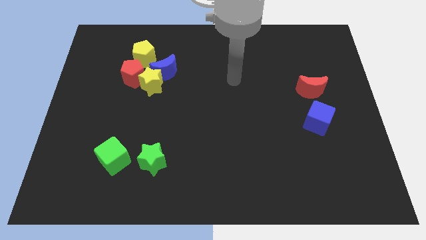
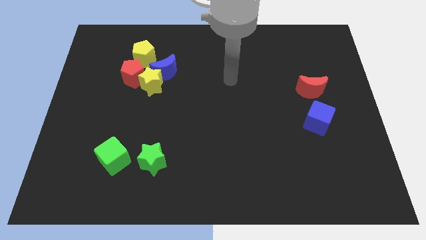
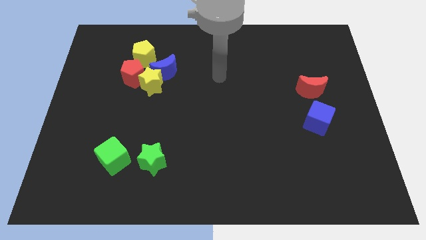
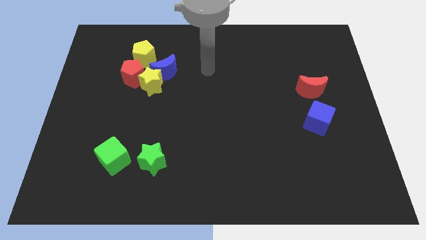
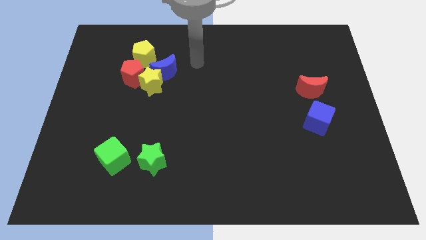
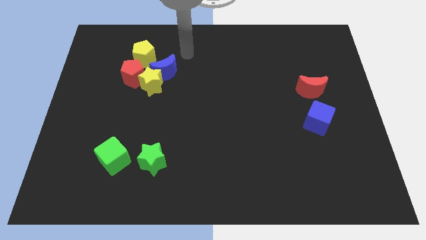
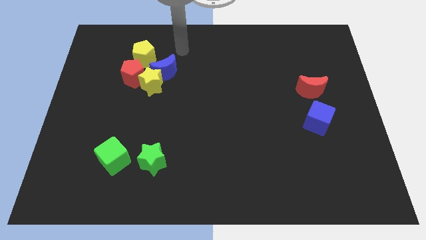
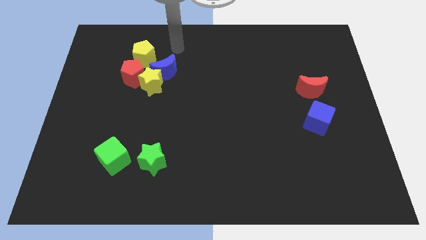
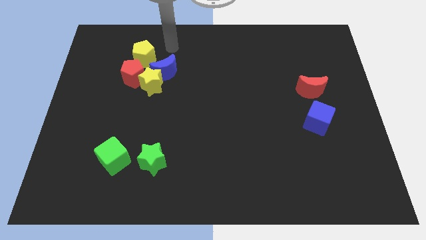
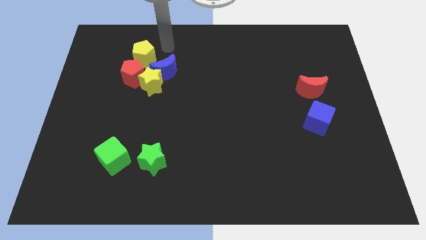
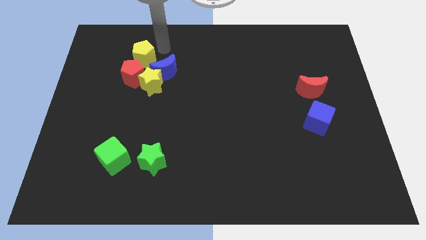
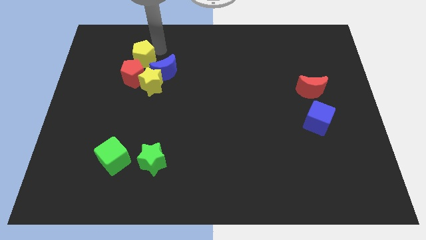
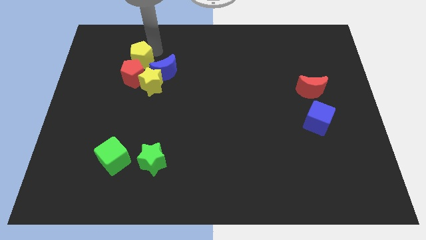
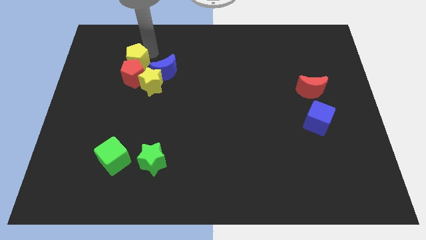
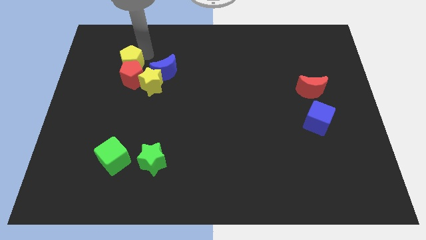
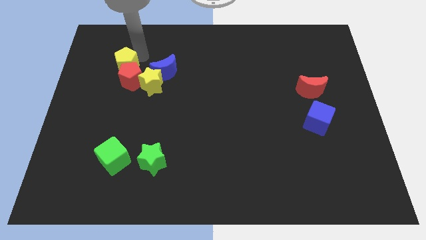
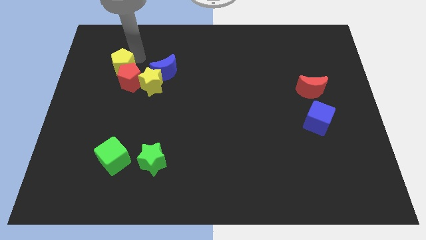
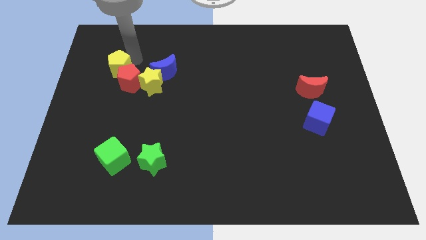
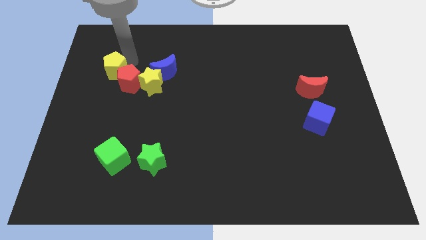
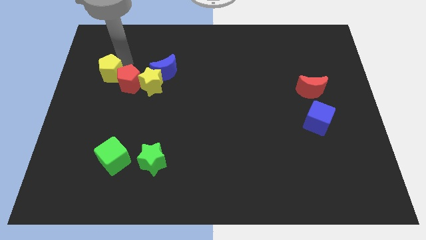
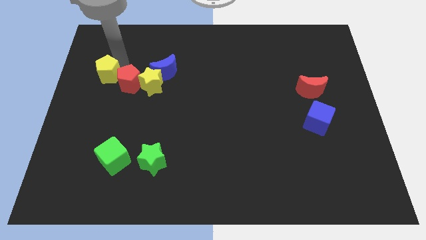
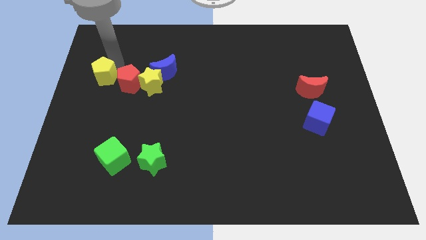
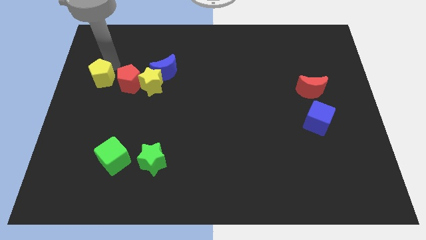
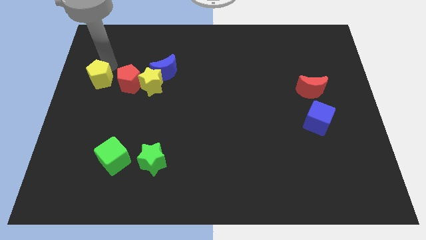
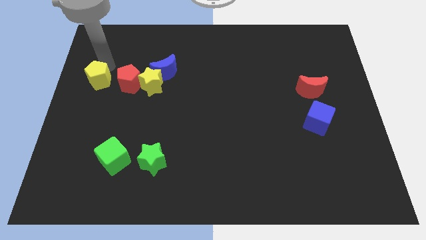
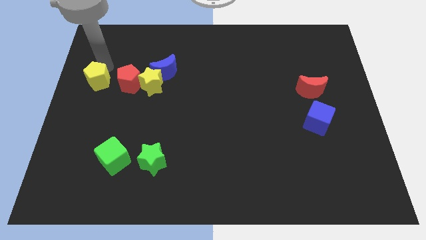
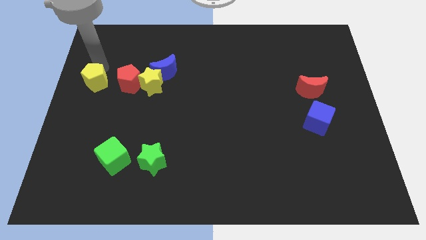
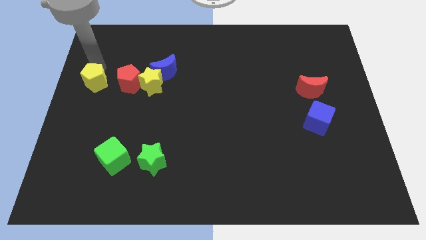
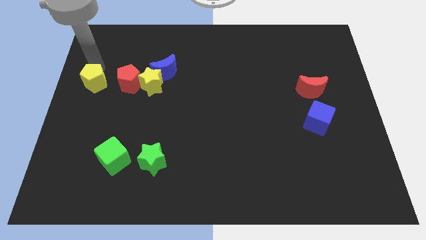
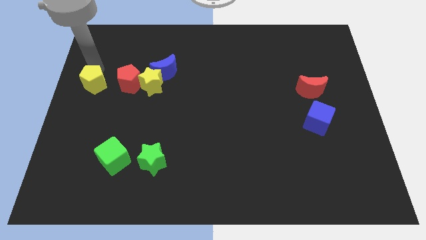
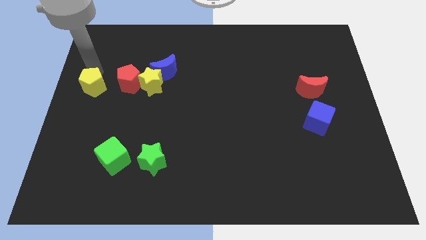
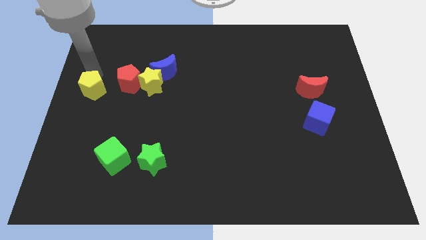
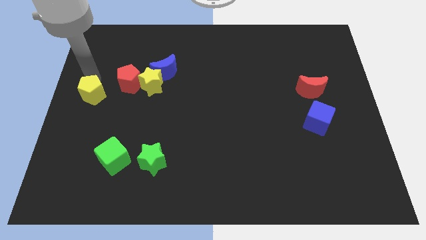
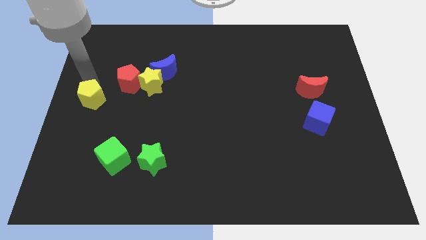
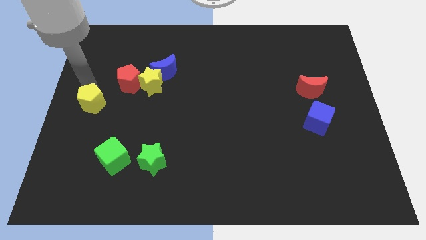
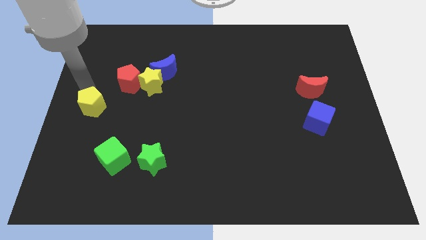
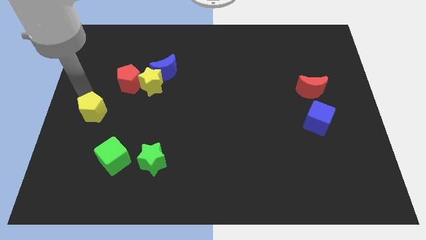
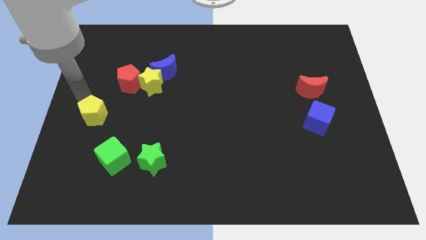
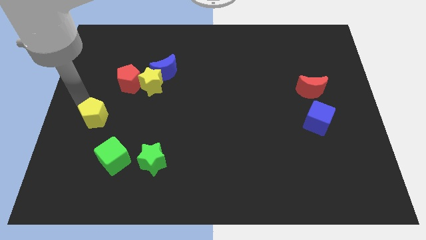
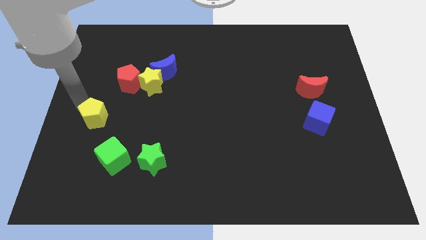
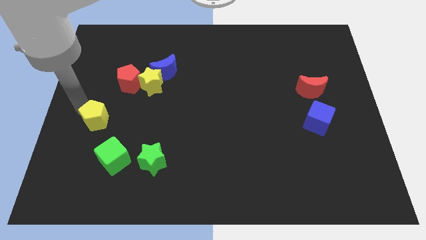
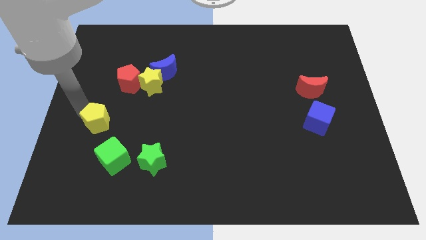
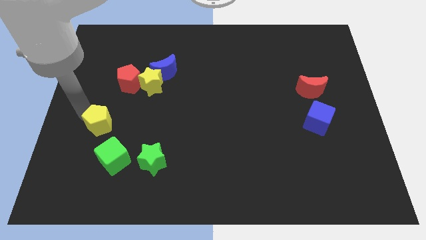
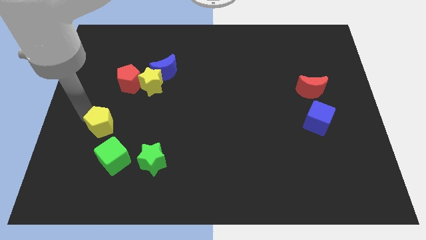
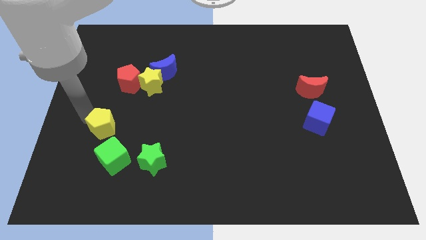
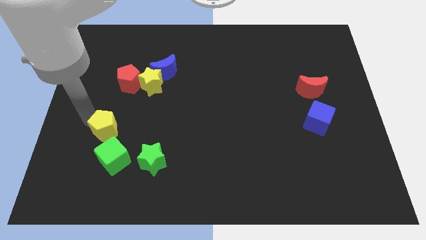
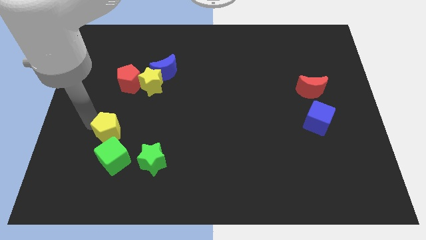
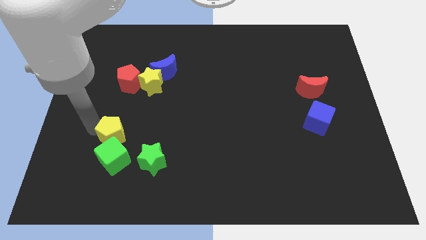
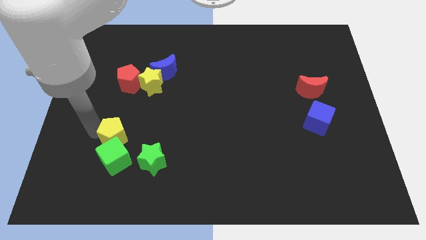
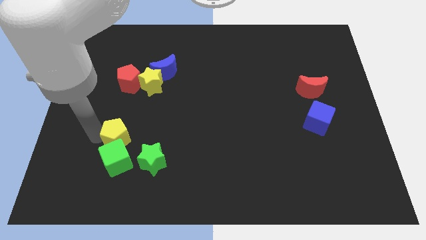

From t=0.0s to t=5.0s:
put the yellow pentagon close to the green cube

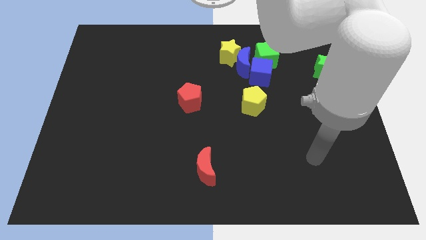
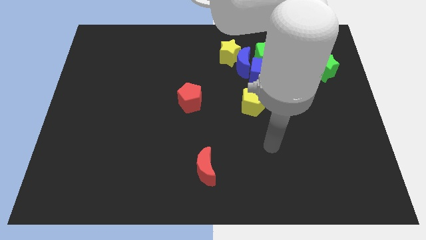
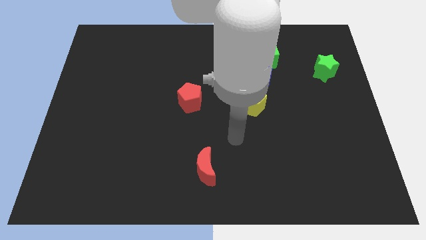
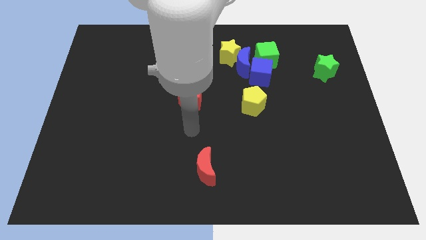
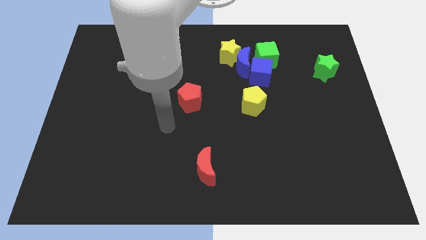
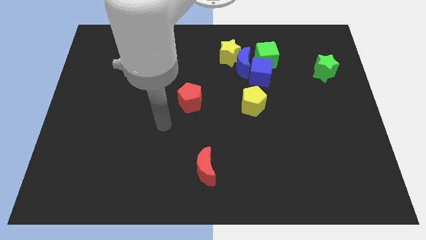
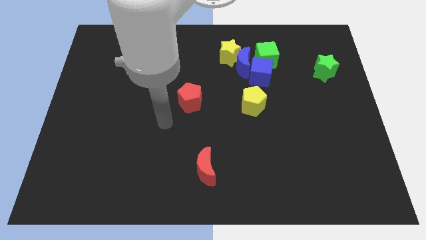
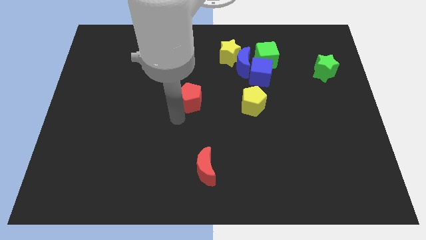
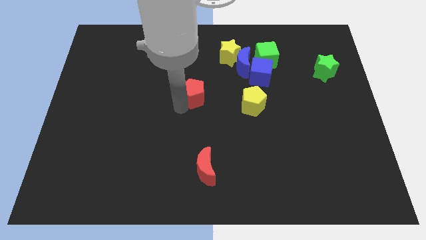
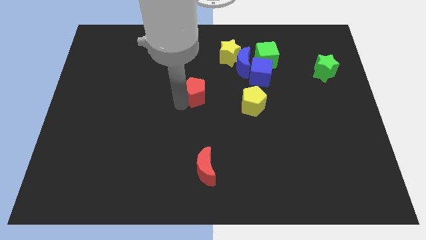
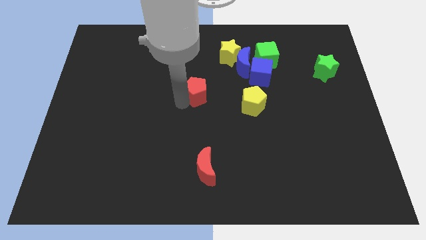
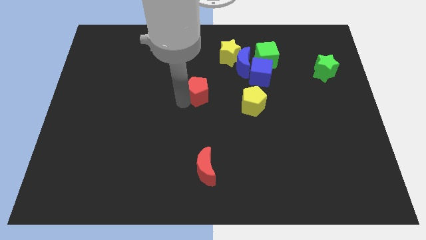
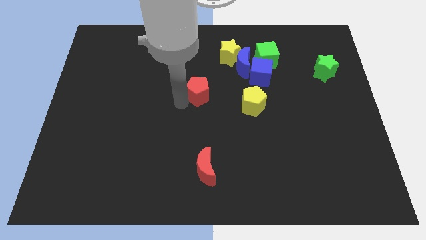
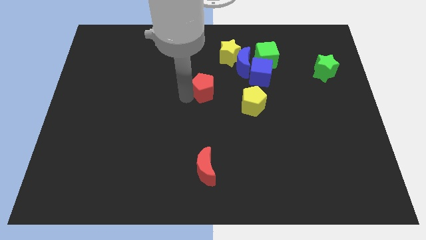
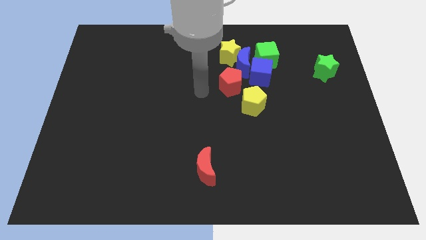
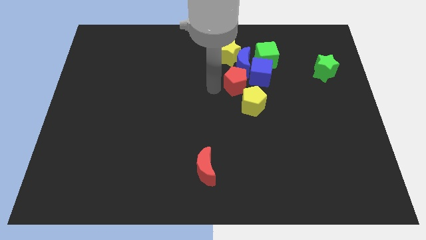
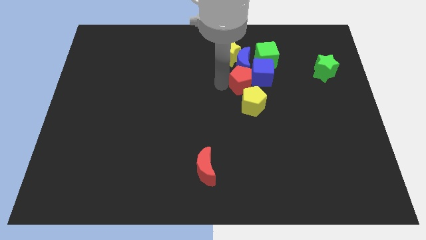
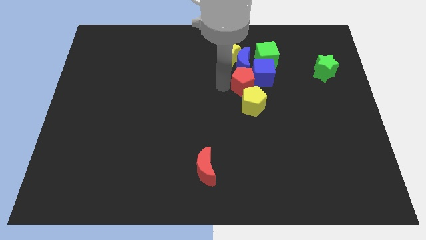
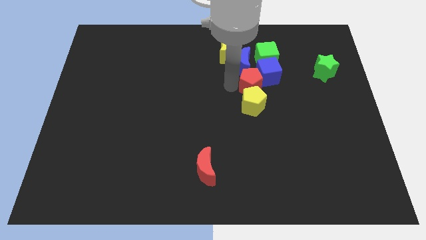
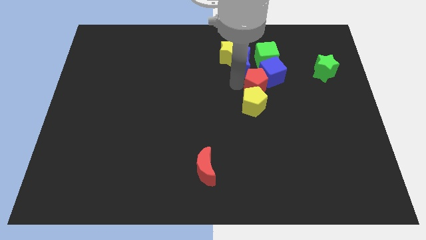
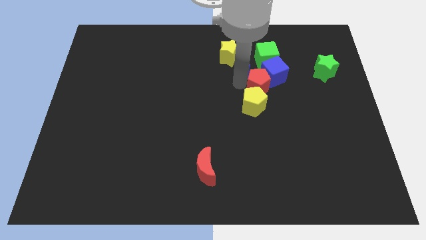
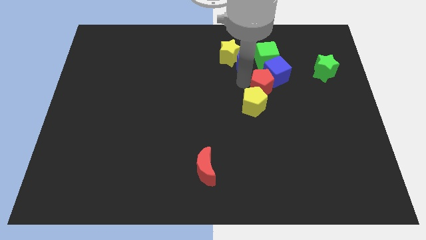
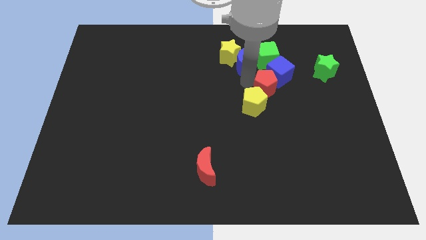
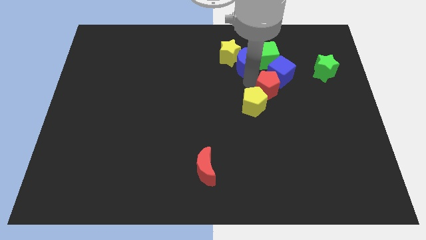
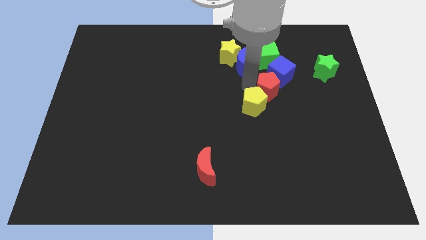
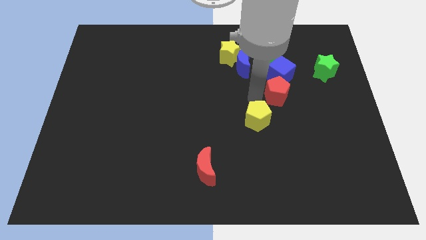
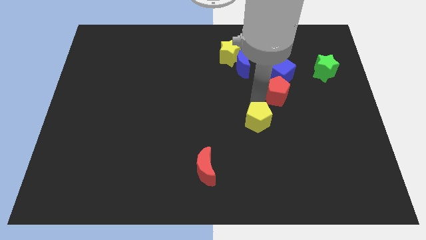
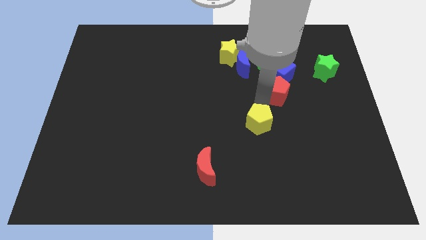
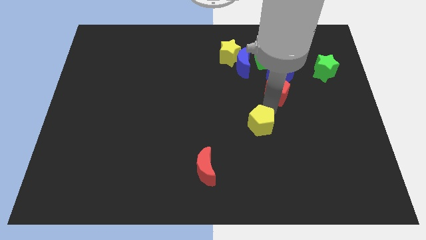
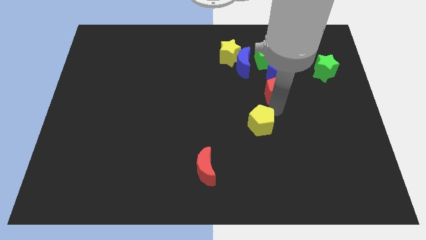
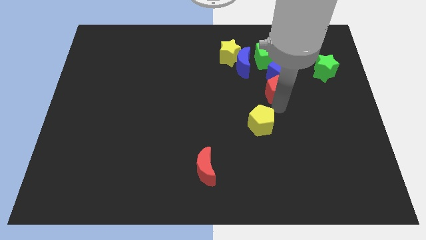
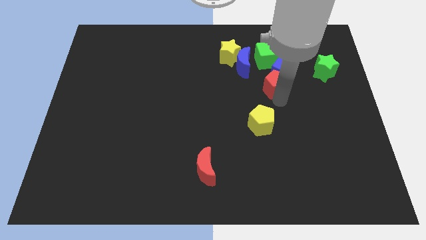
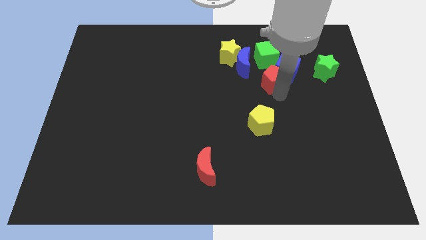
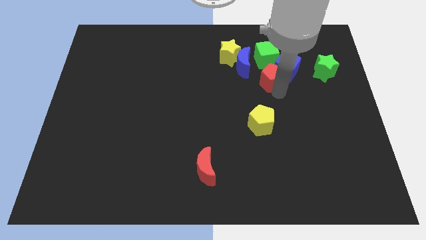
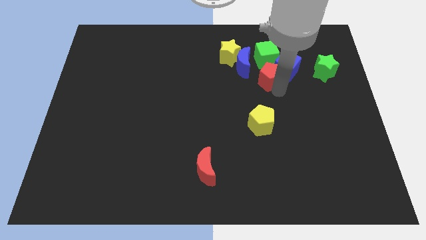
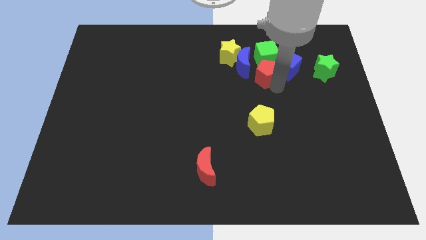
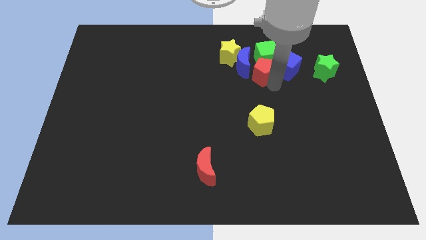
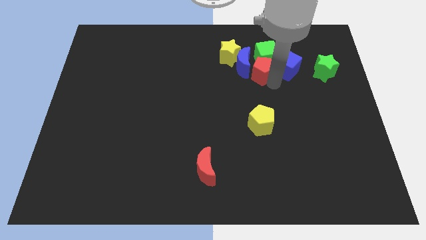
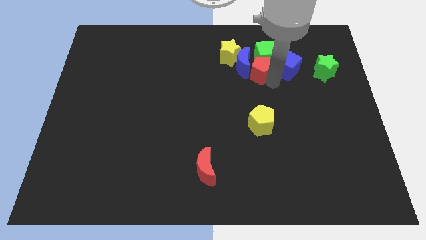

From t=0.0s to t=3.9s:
move the red pentagon towards the green cube
